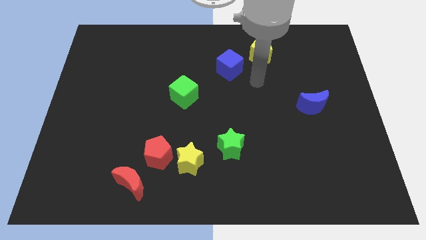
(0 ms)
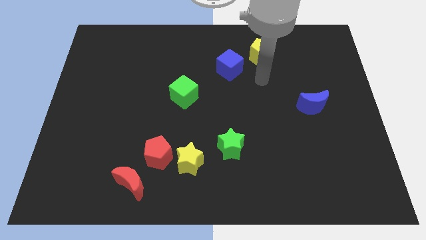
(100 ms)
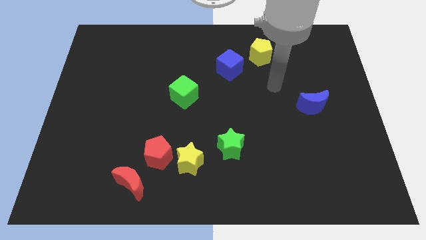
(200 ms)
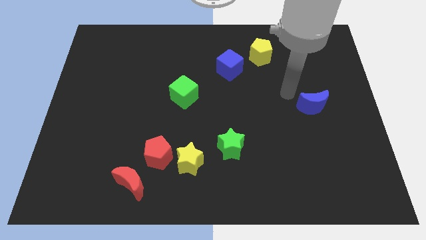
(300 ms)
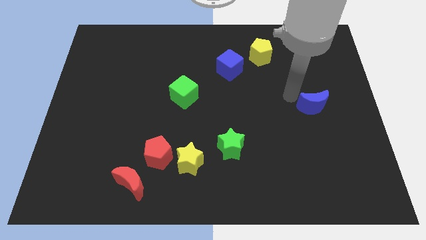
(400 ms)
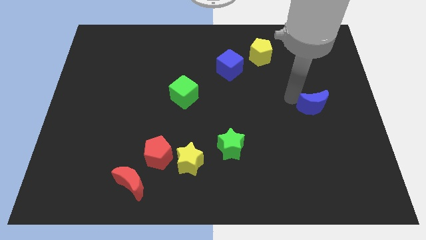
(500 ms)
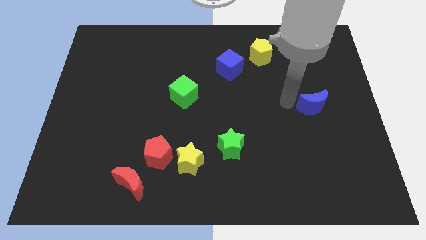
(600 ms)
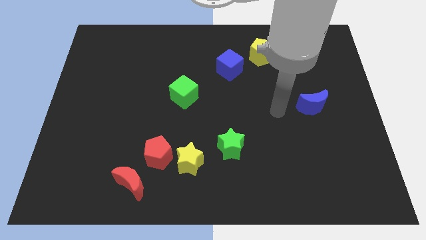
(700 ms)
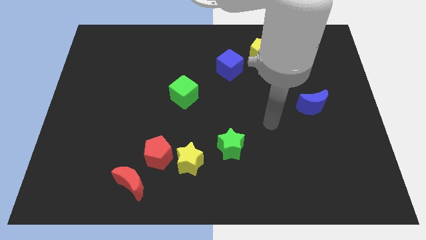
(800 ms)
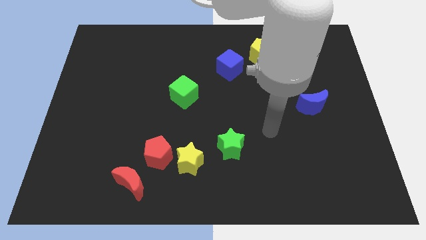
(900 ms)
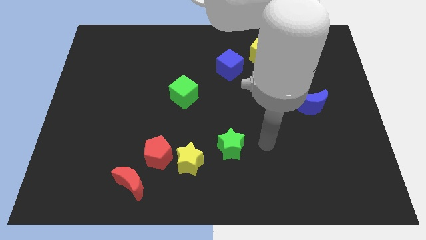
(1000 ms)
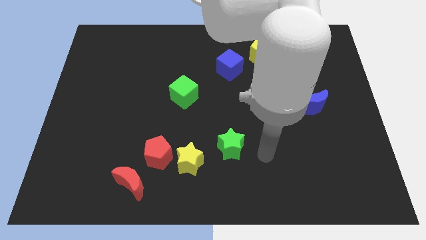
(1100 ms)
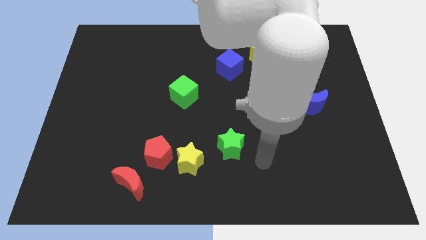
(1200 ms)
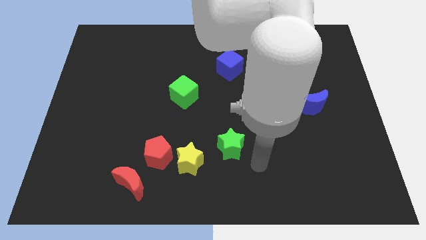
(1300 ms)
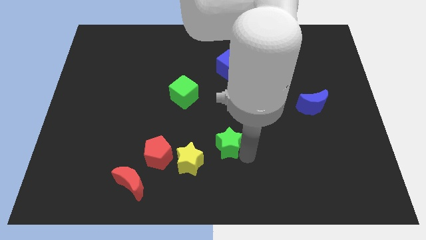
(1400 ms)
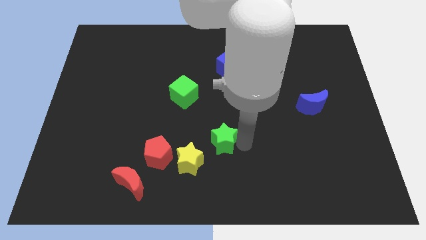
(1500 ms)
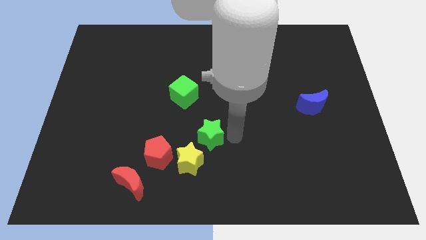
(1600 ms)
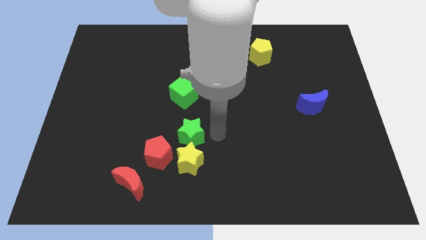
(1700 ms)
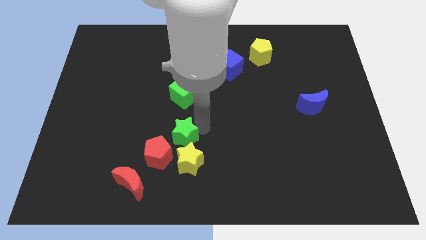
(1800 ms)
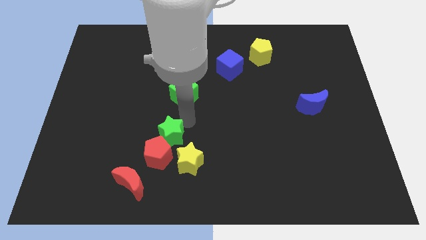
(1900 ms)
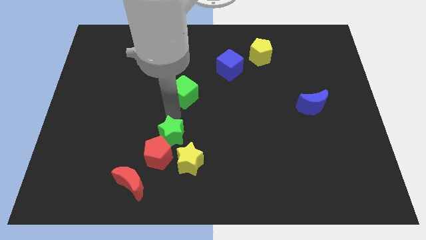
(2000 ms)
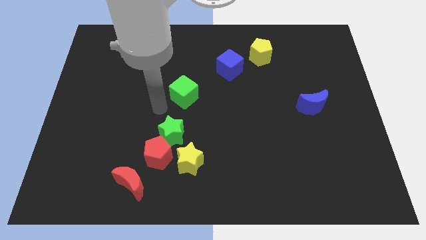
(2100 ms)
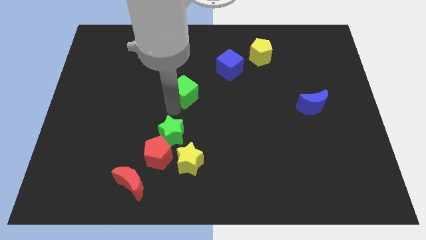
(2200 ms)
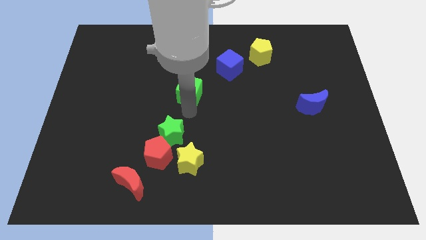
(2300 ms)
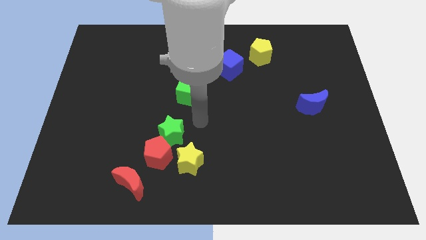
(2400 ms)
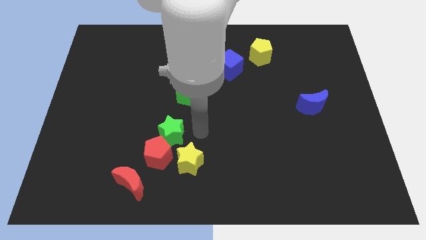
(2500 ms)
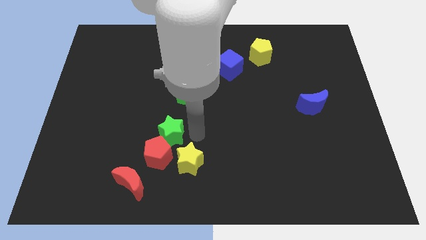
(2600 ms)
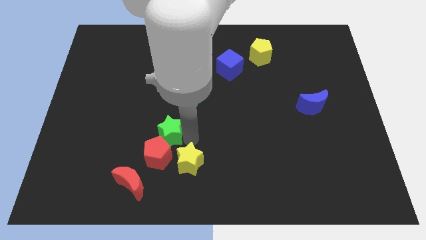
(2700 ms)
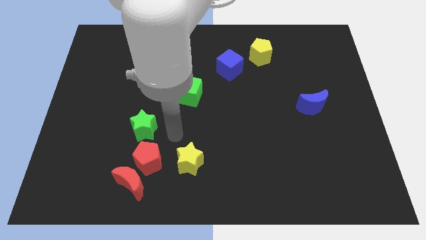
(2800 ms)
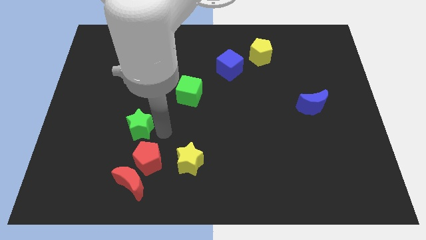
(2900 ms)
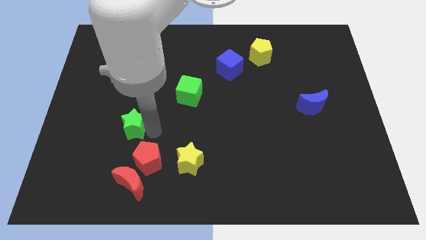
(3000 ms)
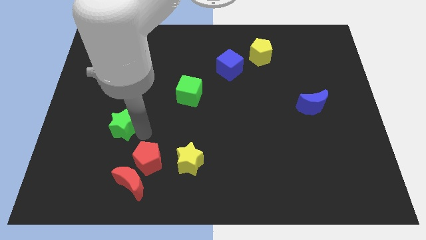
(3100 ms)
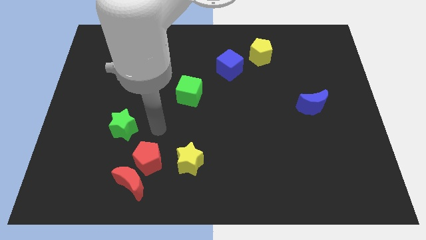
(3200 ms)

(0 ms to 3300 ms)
move the green star towards the top left of red pentagon

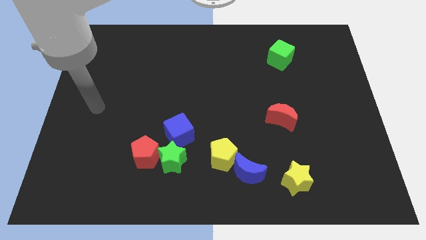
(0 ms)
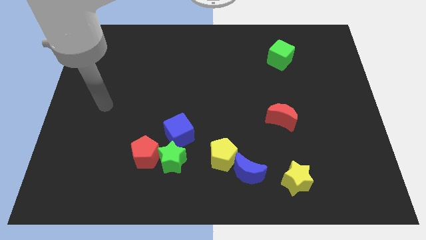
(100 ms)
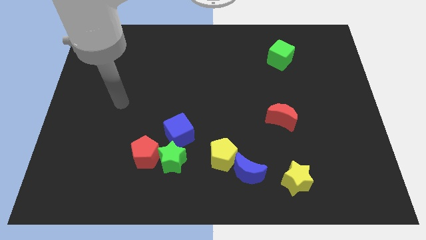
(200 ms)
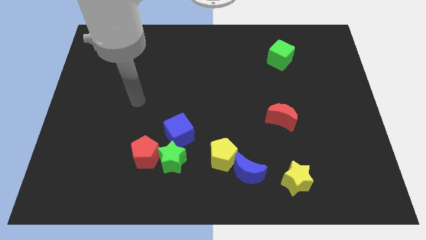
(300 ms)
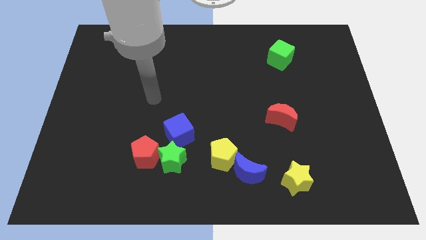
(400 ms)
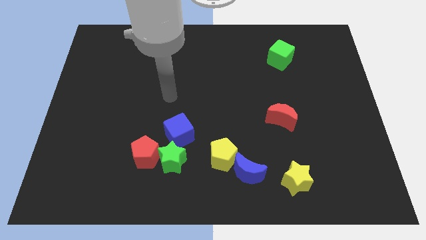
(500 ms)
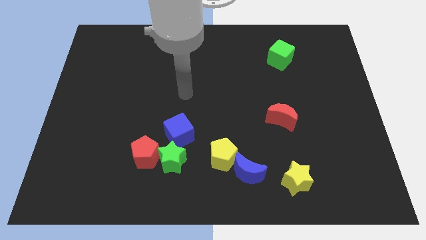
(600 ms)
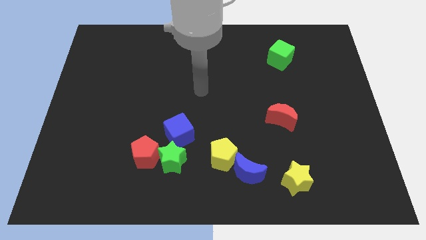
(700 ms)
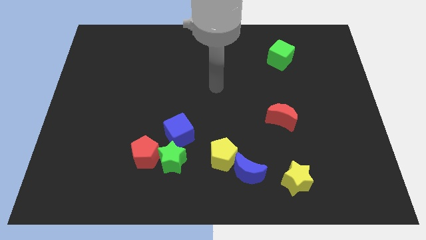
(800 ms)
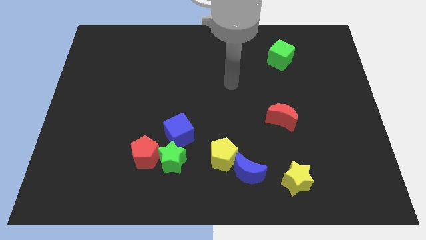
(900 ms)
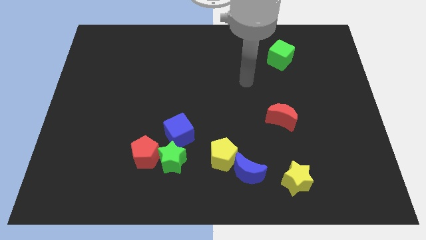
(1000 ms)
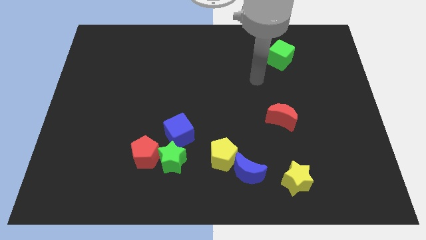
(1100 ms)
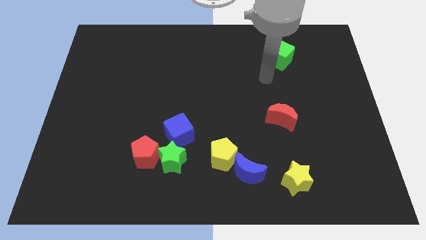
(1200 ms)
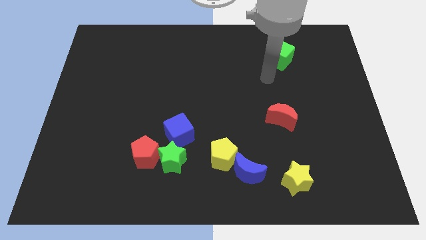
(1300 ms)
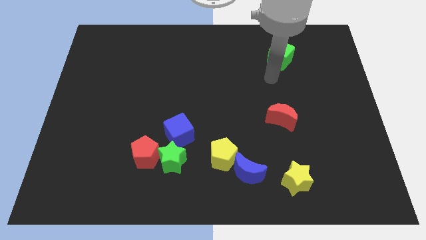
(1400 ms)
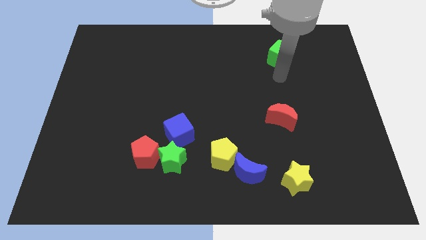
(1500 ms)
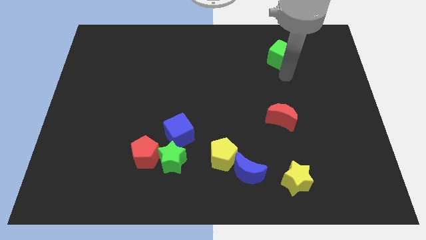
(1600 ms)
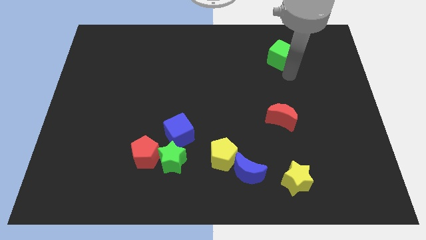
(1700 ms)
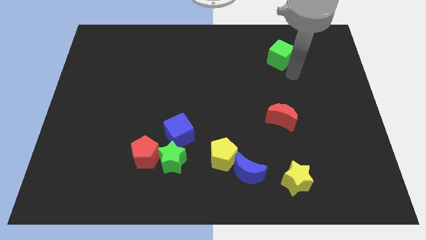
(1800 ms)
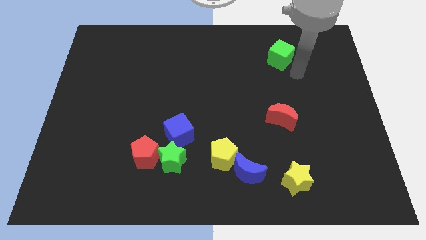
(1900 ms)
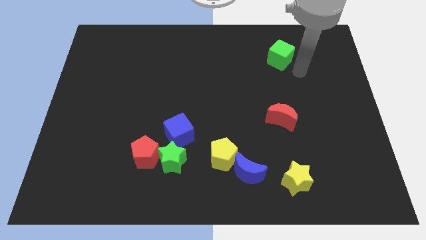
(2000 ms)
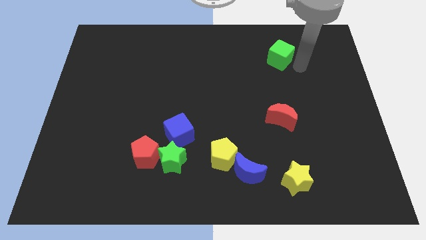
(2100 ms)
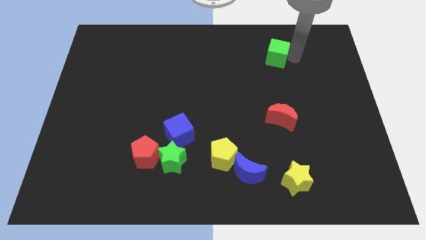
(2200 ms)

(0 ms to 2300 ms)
place the arm right to the green cube

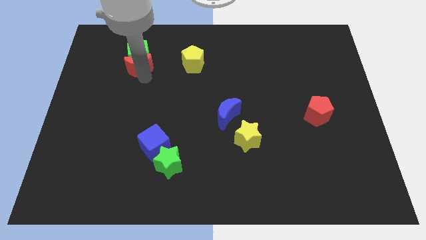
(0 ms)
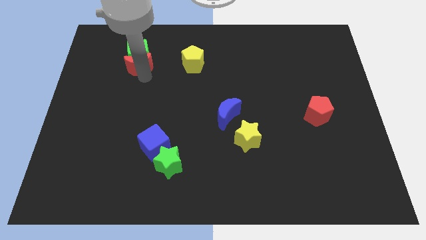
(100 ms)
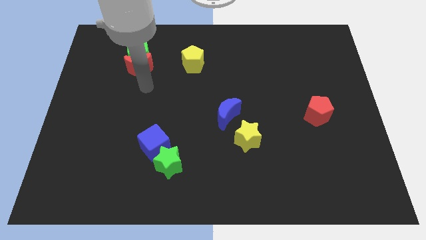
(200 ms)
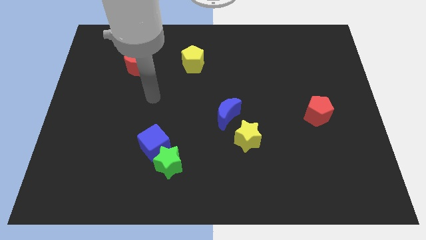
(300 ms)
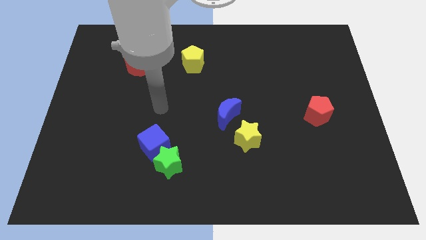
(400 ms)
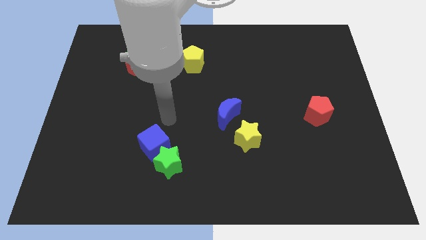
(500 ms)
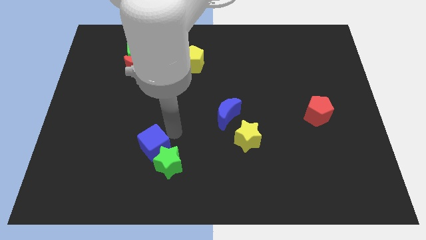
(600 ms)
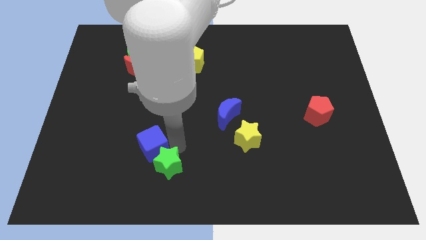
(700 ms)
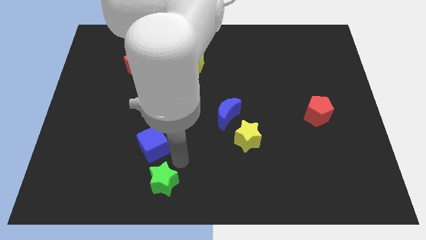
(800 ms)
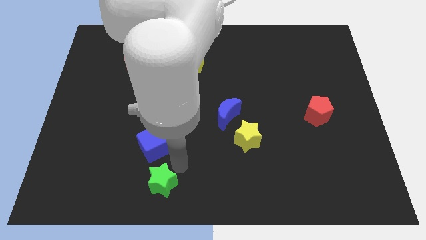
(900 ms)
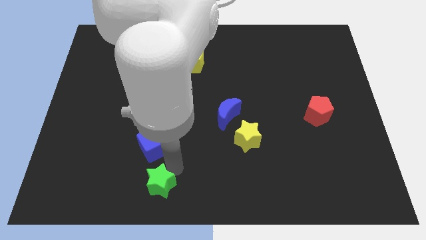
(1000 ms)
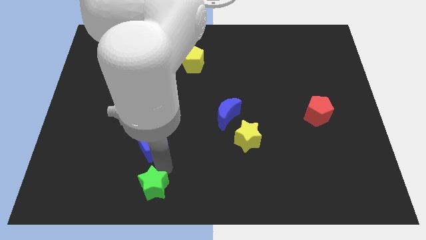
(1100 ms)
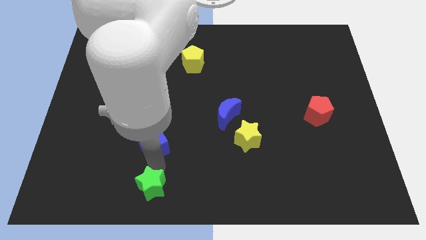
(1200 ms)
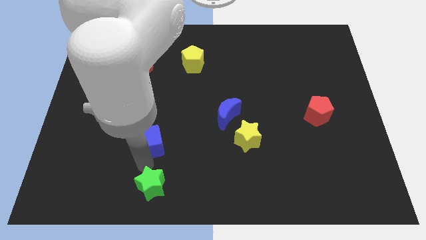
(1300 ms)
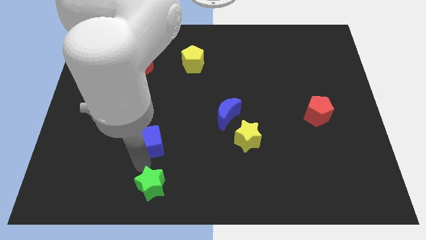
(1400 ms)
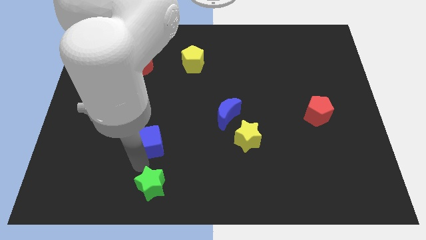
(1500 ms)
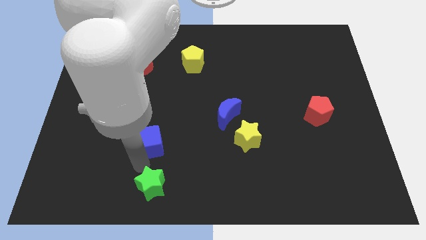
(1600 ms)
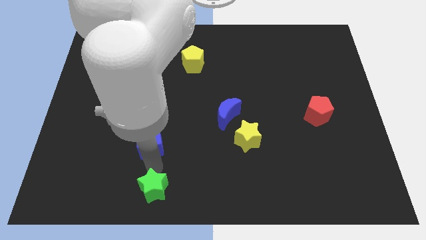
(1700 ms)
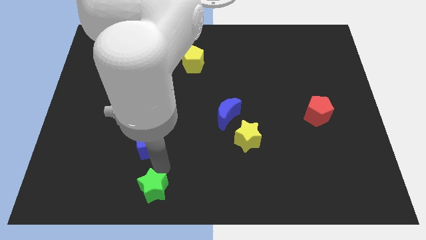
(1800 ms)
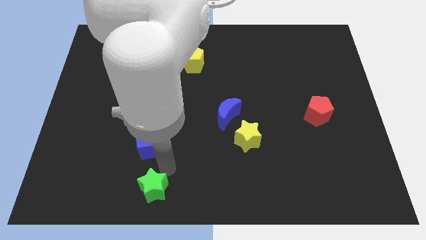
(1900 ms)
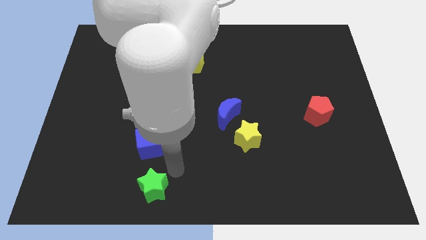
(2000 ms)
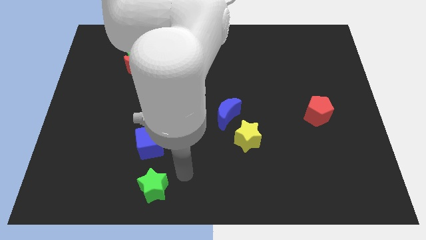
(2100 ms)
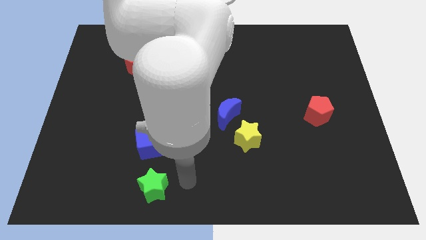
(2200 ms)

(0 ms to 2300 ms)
move green star below the blue cube

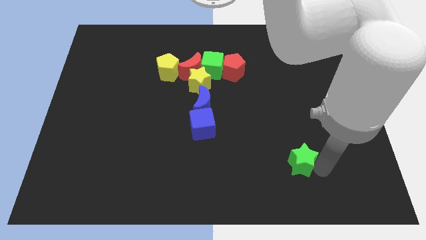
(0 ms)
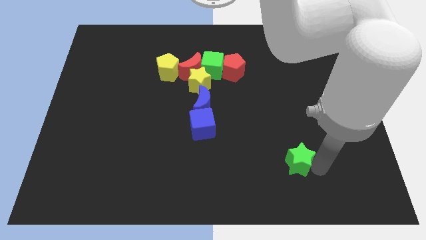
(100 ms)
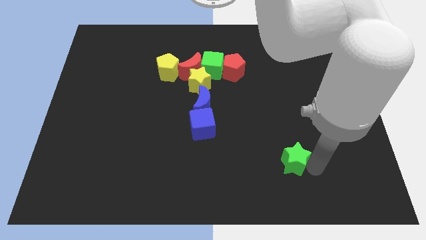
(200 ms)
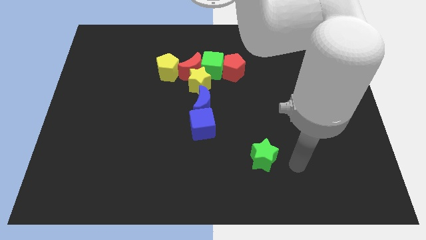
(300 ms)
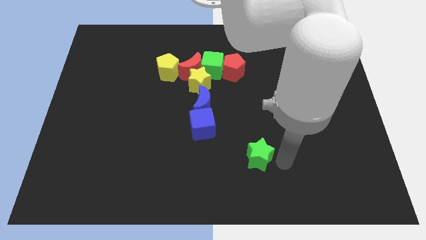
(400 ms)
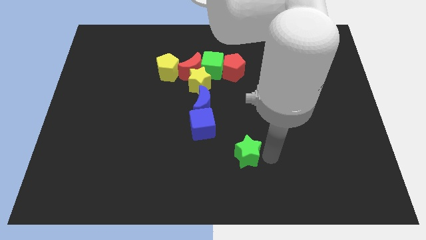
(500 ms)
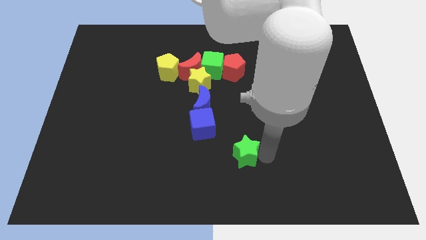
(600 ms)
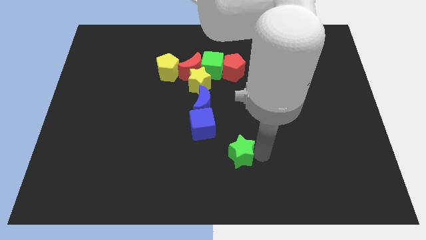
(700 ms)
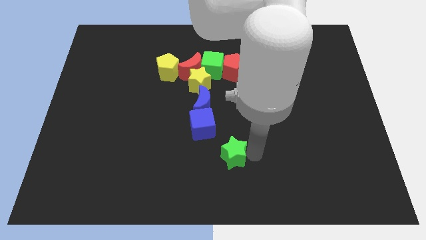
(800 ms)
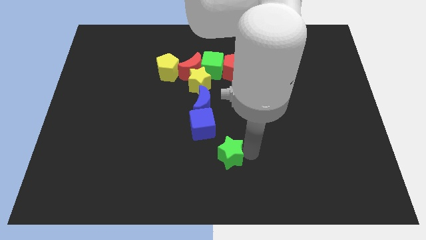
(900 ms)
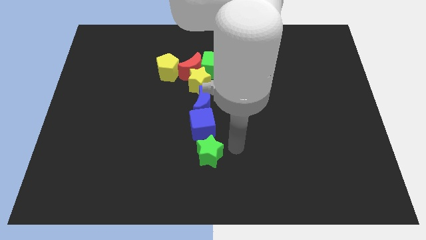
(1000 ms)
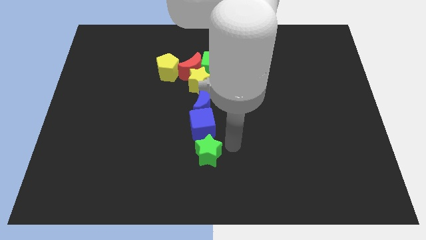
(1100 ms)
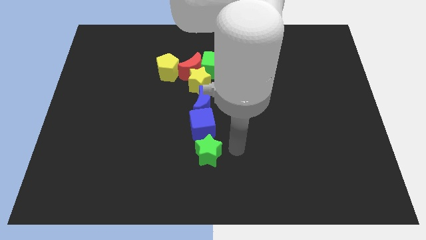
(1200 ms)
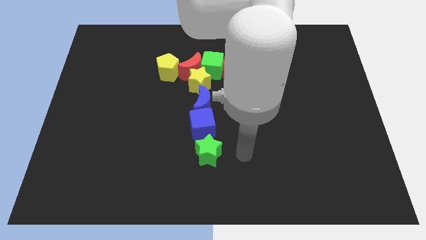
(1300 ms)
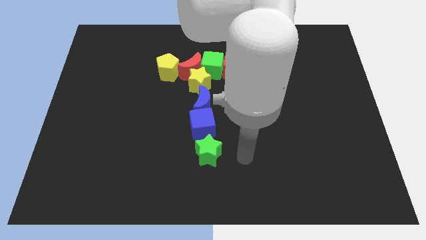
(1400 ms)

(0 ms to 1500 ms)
push the green star to the left side of the board
